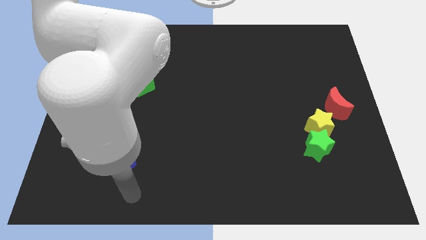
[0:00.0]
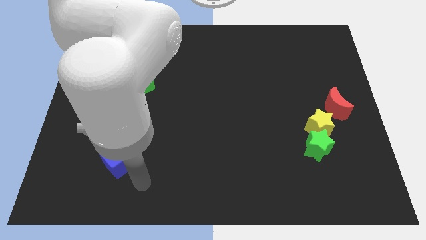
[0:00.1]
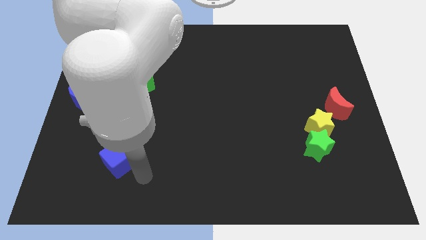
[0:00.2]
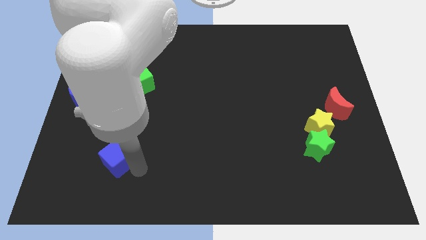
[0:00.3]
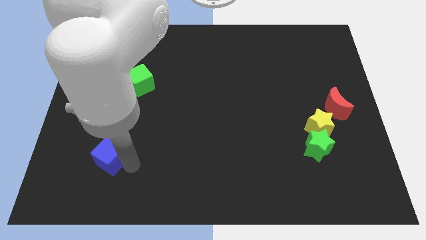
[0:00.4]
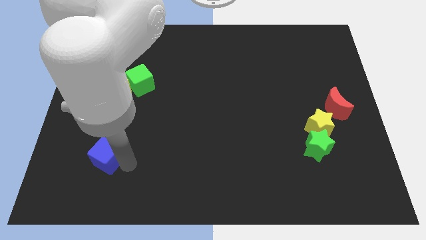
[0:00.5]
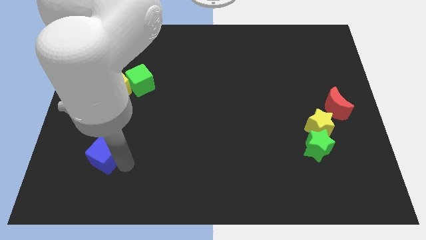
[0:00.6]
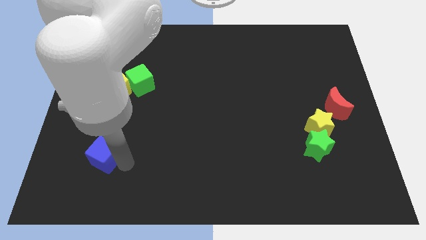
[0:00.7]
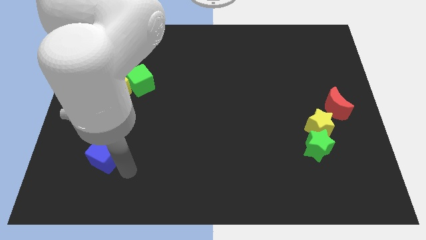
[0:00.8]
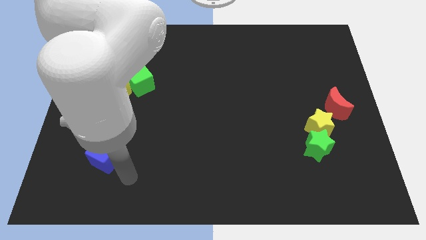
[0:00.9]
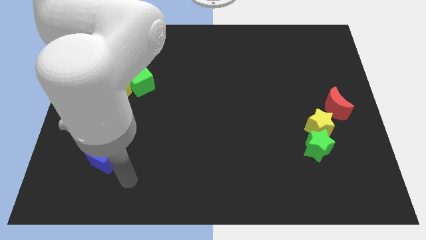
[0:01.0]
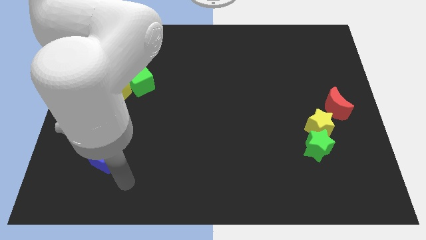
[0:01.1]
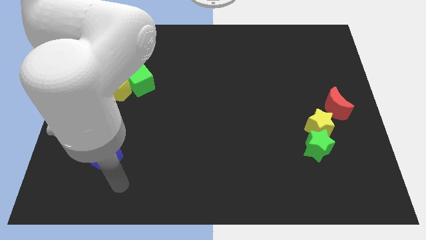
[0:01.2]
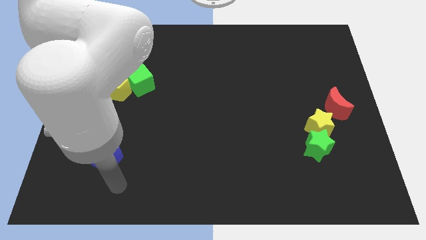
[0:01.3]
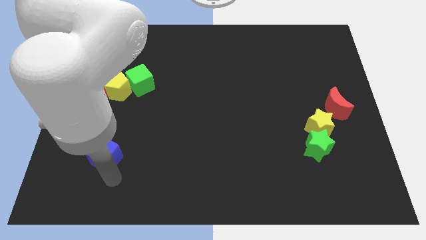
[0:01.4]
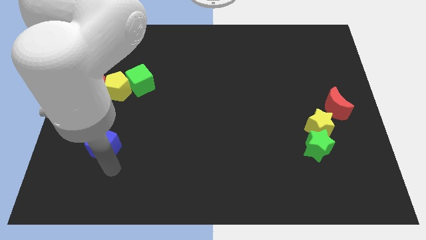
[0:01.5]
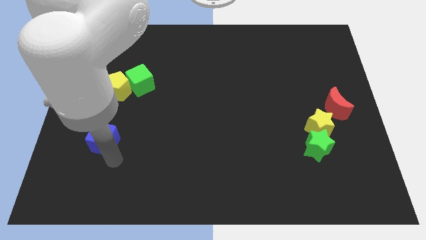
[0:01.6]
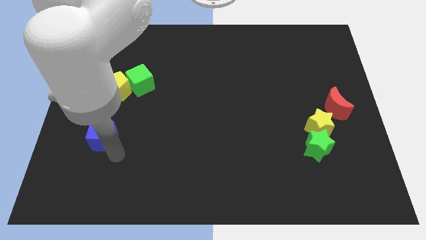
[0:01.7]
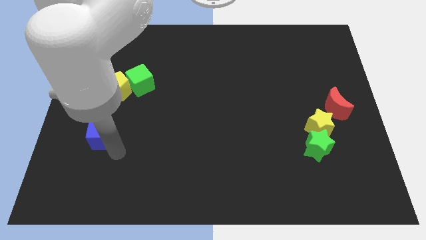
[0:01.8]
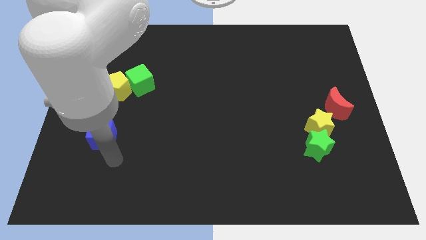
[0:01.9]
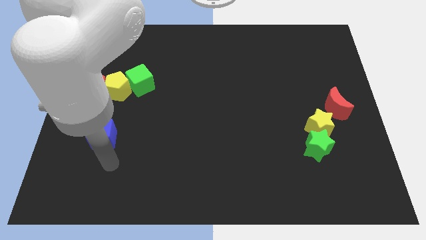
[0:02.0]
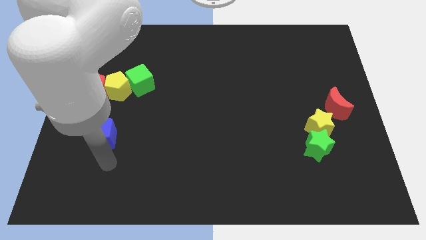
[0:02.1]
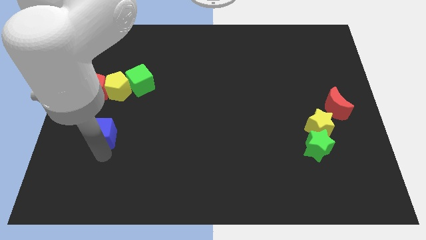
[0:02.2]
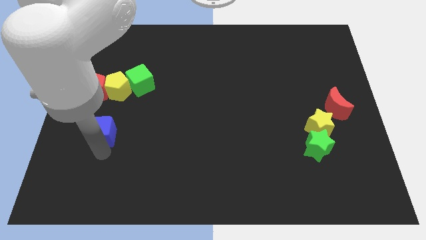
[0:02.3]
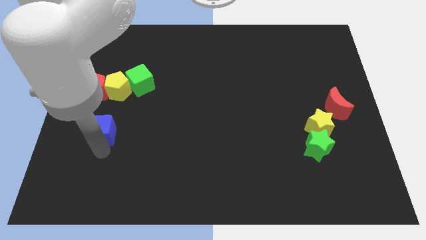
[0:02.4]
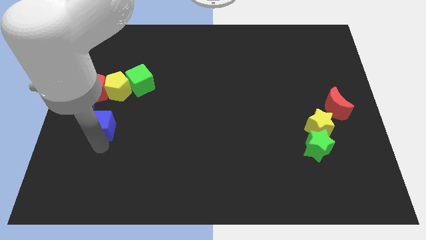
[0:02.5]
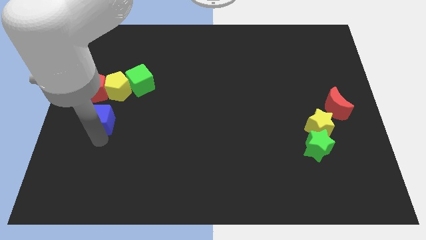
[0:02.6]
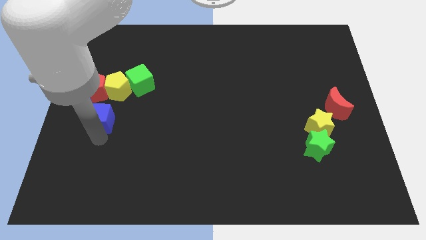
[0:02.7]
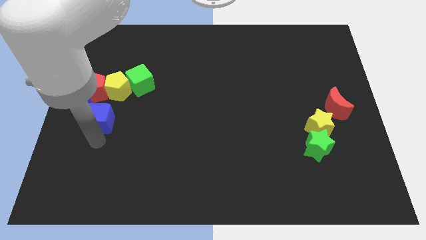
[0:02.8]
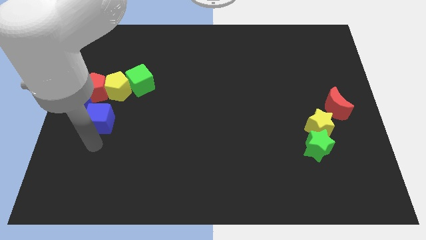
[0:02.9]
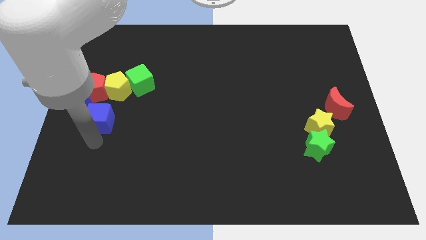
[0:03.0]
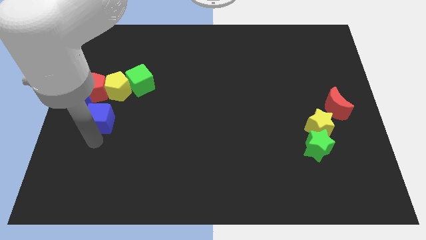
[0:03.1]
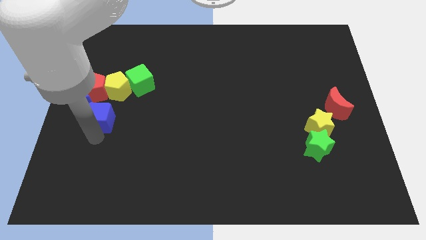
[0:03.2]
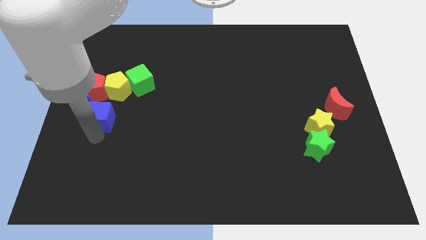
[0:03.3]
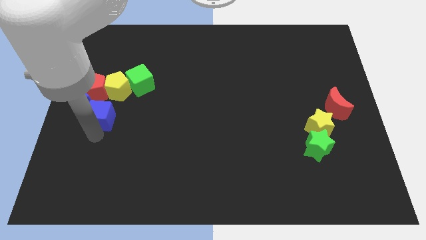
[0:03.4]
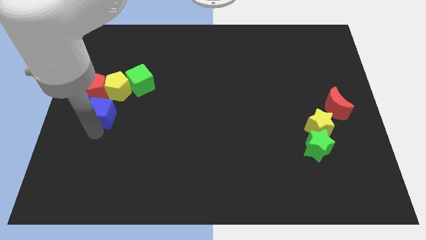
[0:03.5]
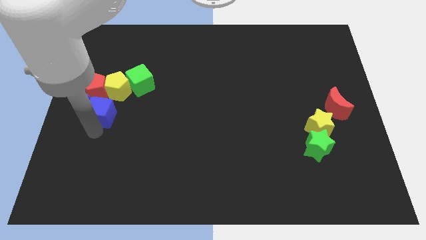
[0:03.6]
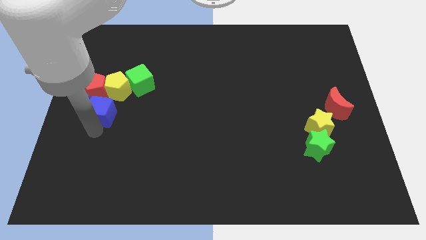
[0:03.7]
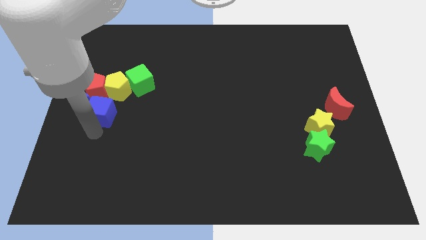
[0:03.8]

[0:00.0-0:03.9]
move the blue cube into the group of blocks

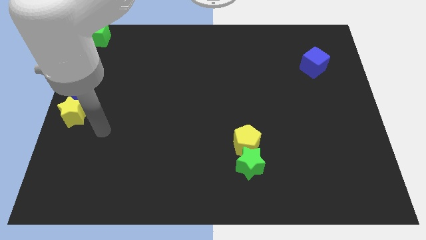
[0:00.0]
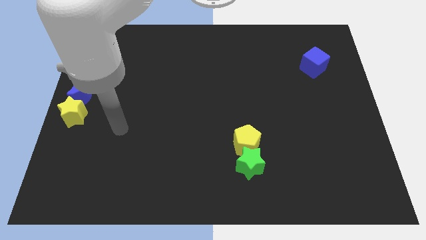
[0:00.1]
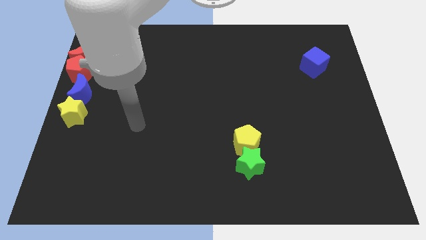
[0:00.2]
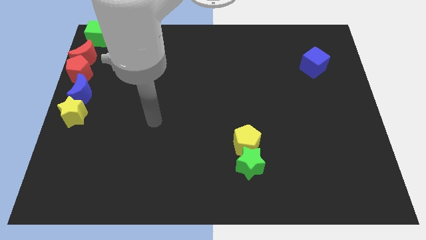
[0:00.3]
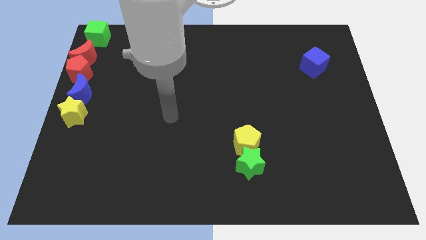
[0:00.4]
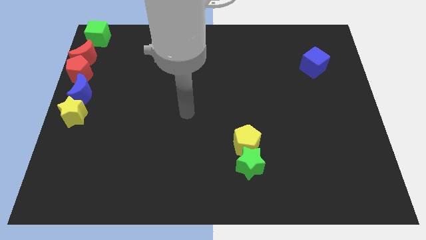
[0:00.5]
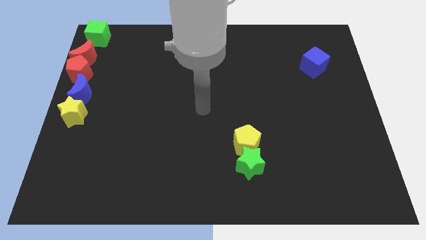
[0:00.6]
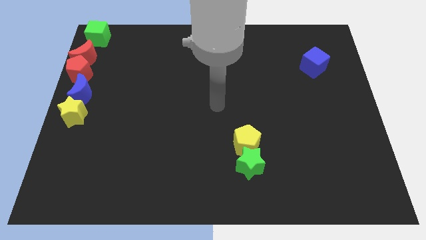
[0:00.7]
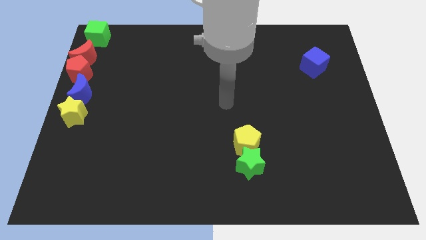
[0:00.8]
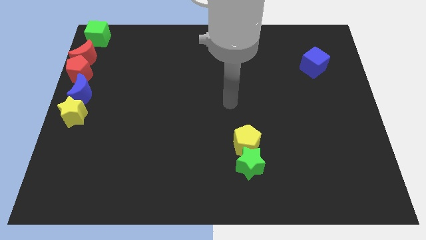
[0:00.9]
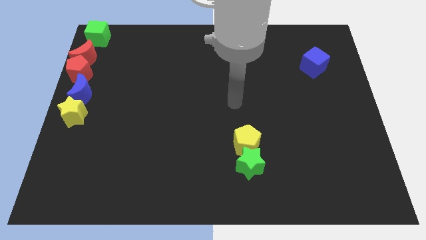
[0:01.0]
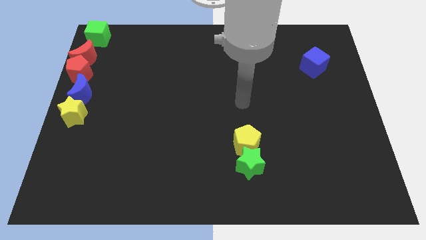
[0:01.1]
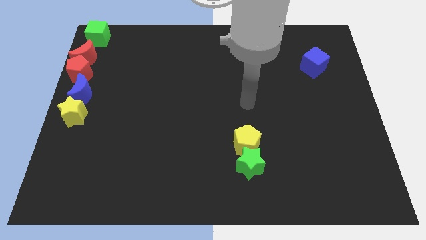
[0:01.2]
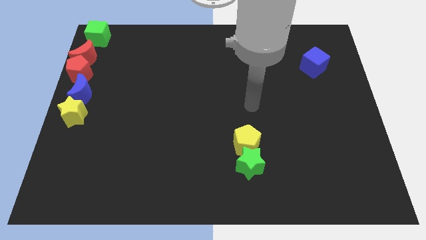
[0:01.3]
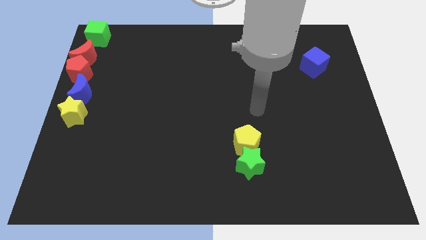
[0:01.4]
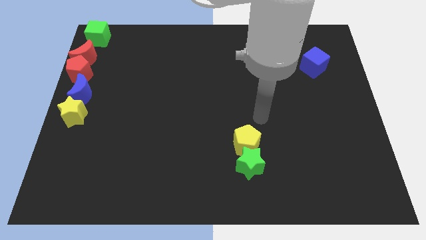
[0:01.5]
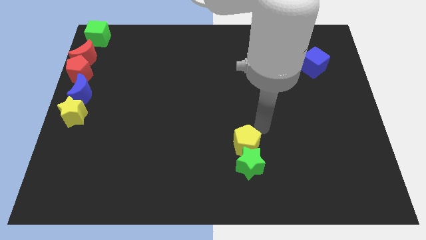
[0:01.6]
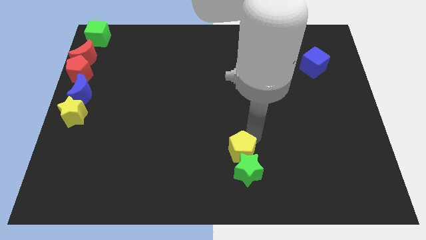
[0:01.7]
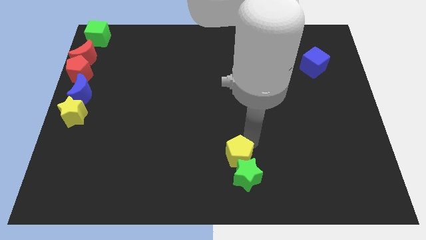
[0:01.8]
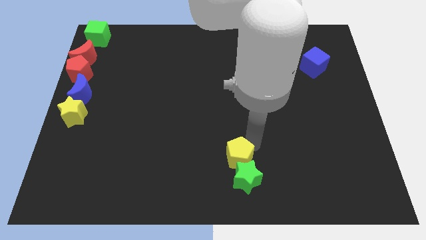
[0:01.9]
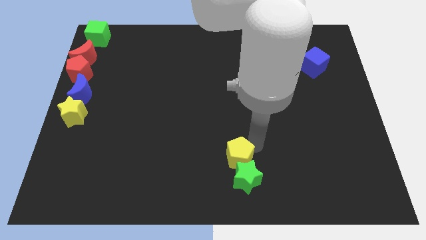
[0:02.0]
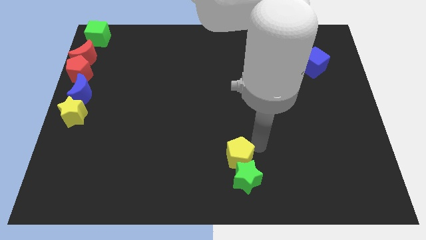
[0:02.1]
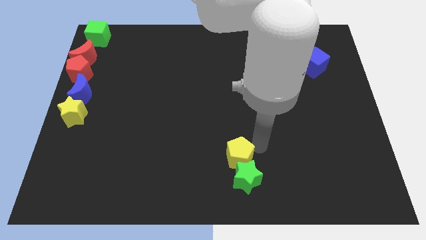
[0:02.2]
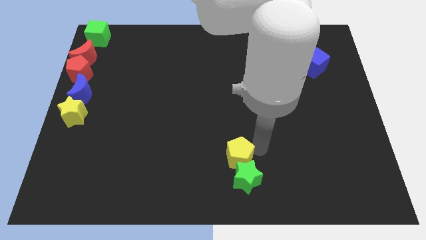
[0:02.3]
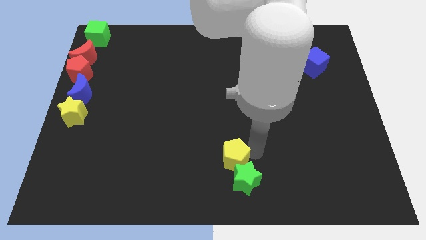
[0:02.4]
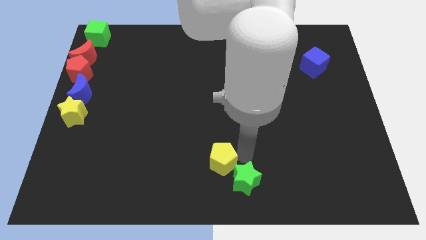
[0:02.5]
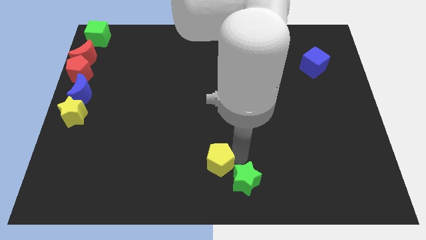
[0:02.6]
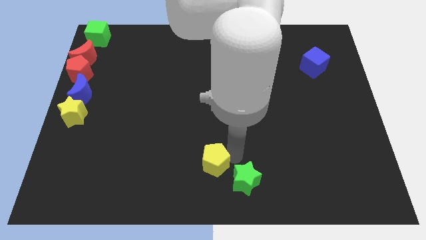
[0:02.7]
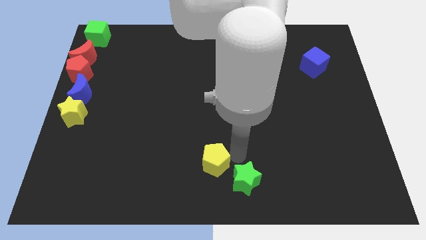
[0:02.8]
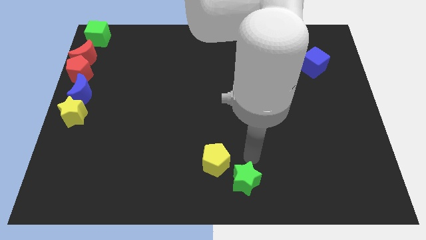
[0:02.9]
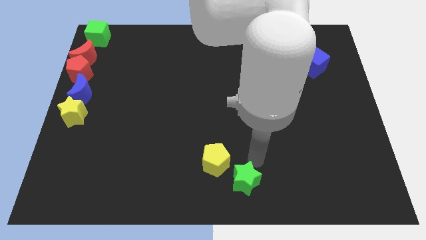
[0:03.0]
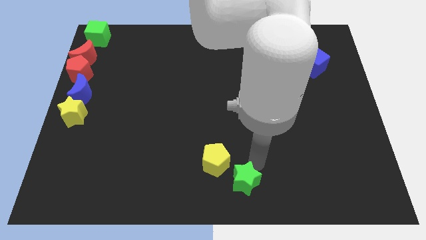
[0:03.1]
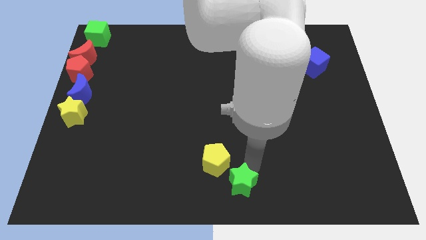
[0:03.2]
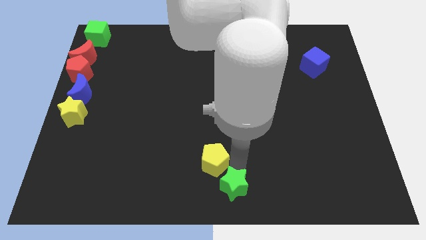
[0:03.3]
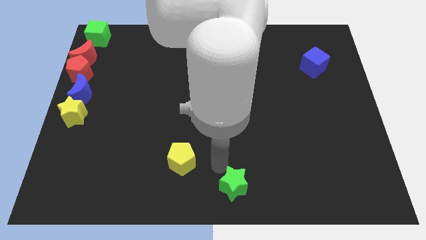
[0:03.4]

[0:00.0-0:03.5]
push the yellow pentagon and the green star slightly to the bottom

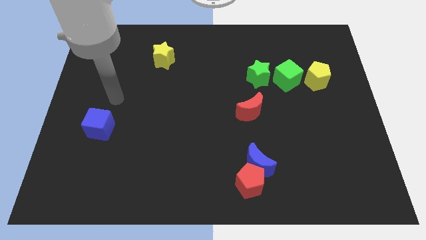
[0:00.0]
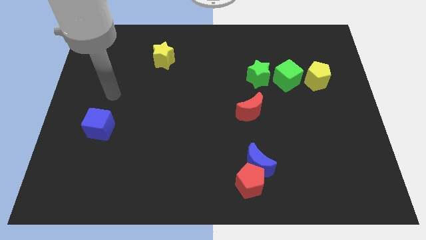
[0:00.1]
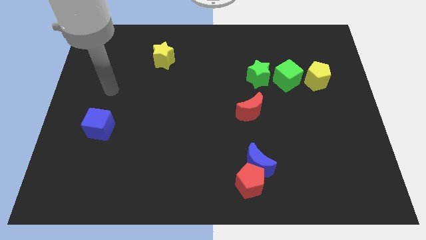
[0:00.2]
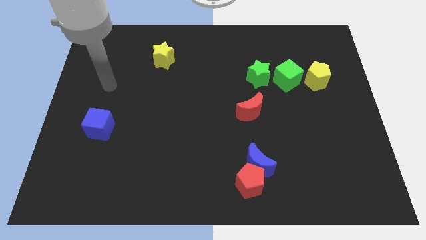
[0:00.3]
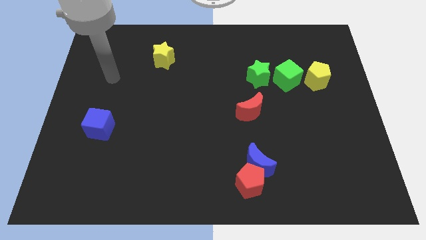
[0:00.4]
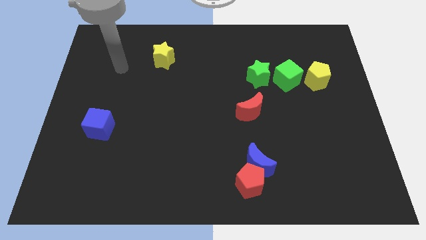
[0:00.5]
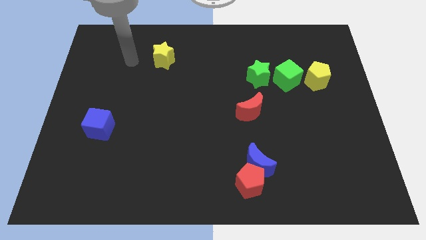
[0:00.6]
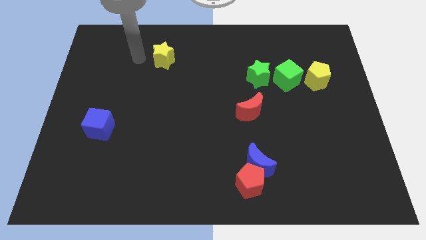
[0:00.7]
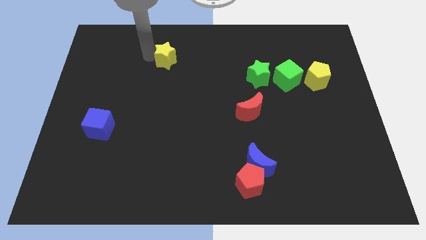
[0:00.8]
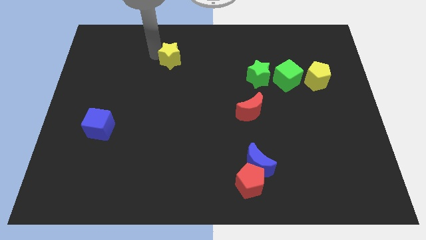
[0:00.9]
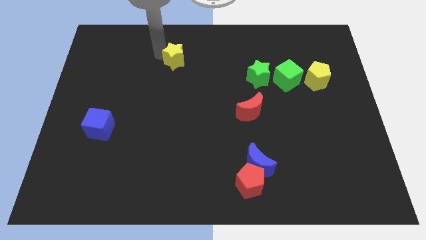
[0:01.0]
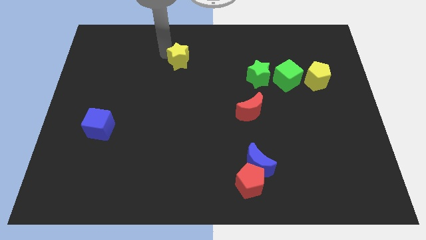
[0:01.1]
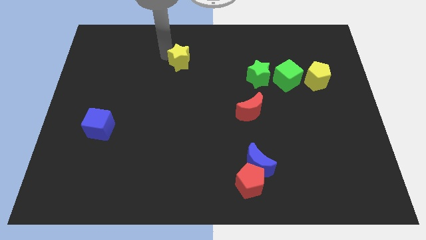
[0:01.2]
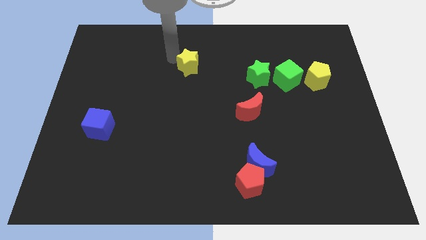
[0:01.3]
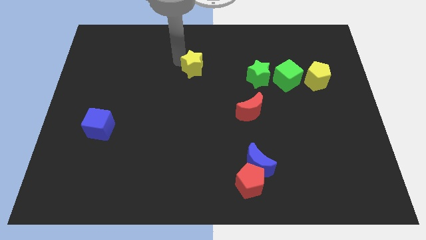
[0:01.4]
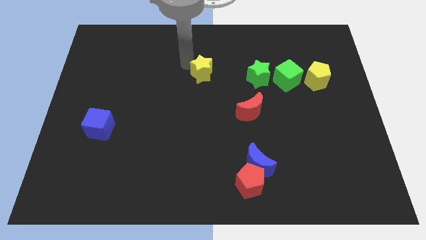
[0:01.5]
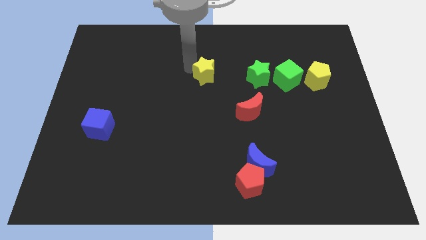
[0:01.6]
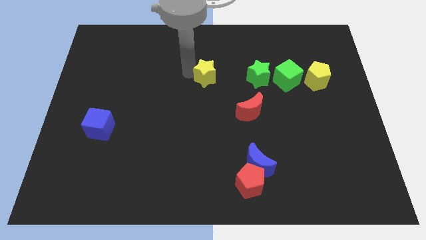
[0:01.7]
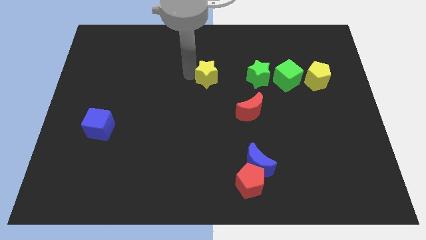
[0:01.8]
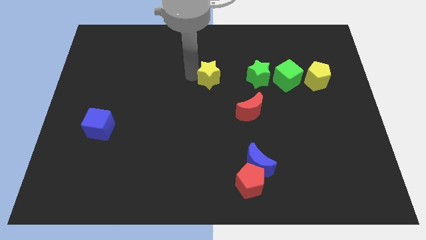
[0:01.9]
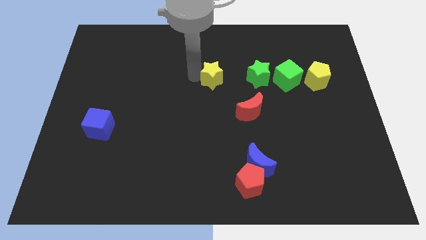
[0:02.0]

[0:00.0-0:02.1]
slide yellow star to the left of green star
